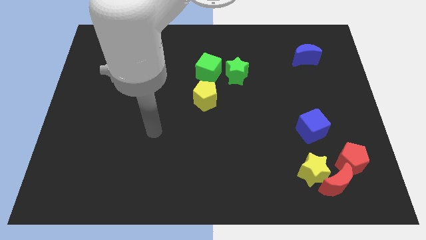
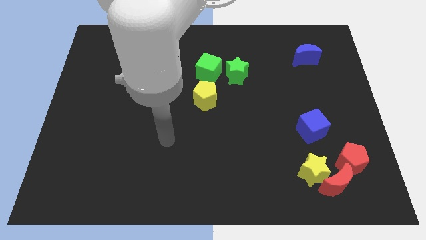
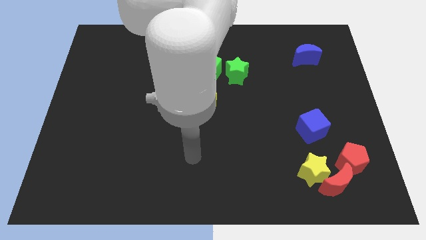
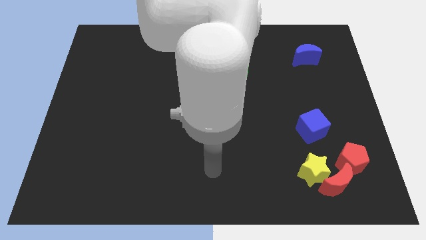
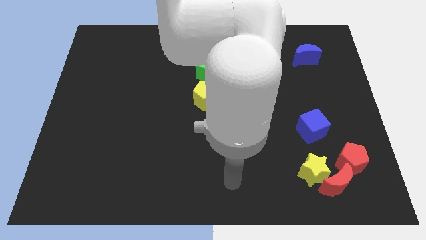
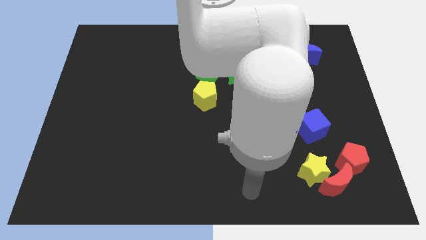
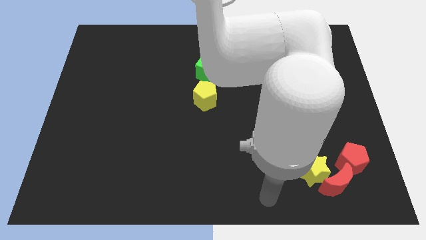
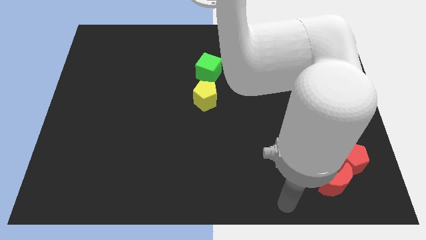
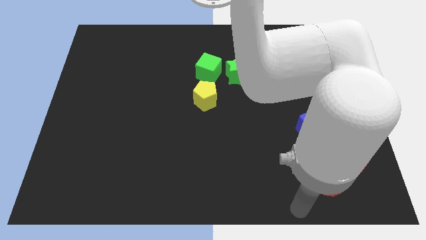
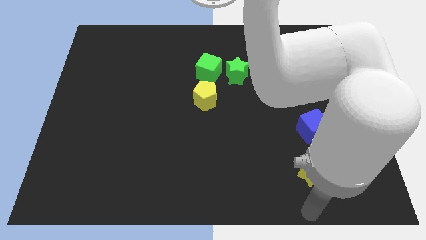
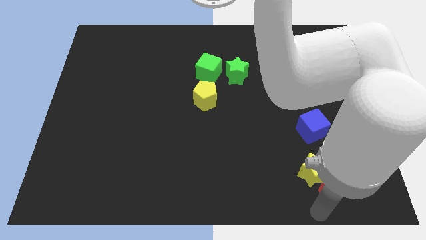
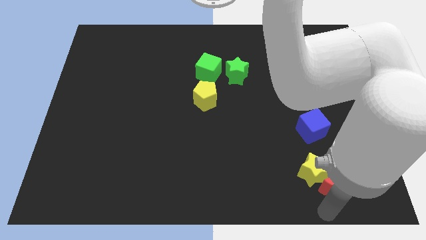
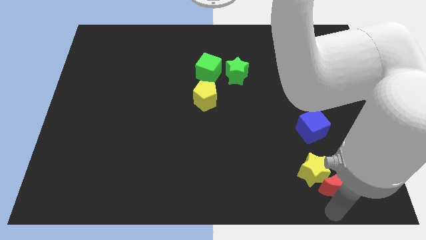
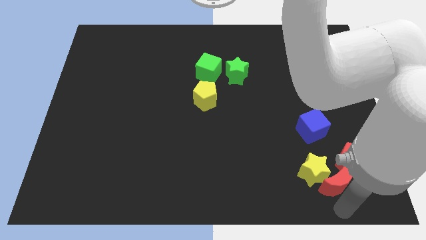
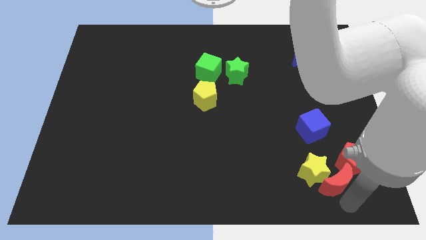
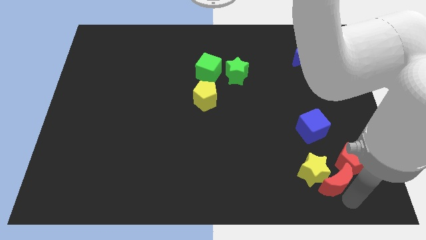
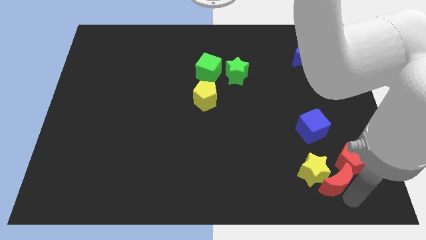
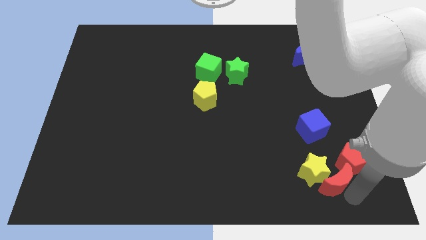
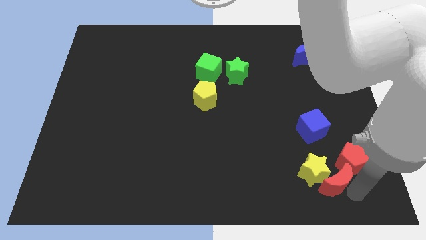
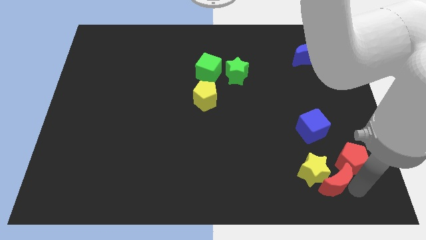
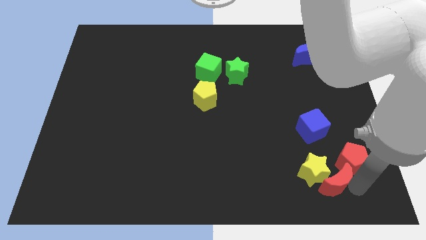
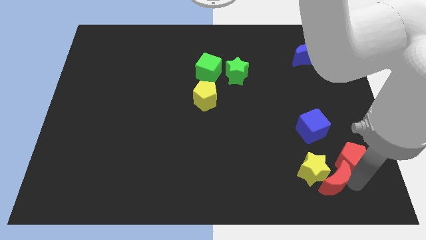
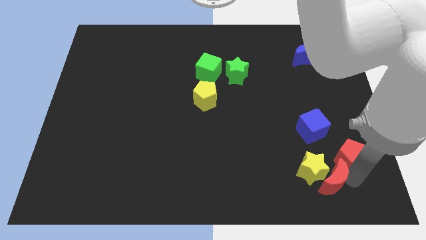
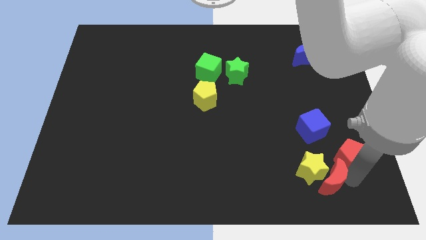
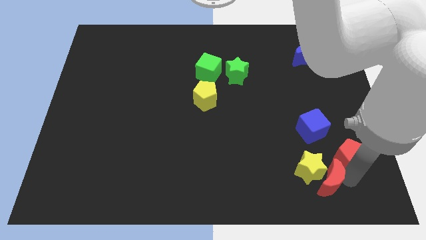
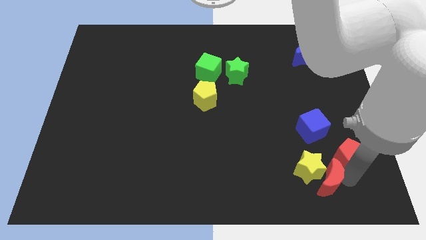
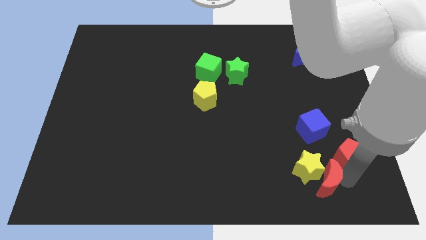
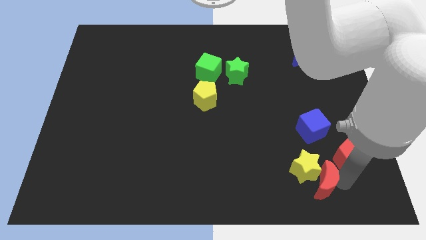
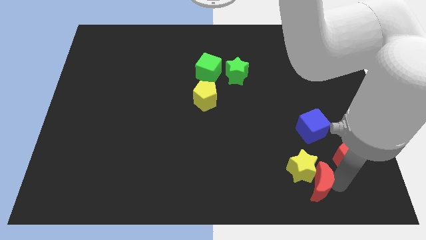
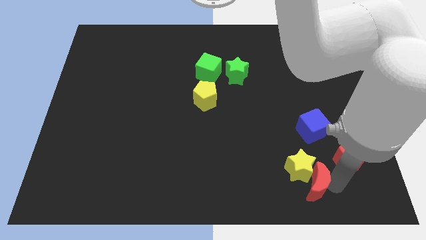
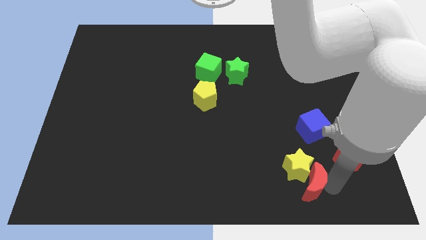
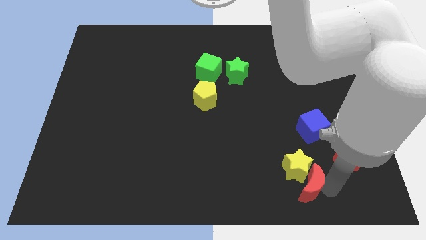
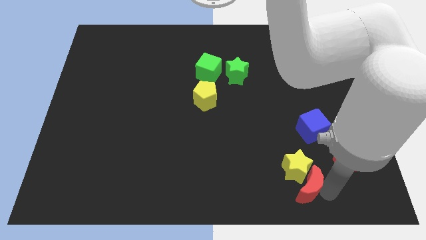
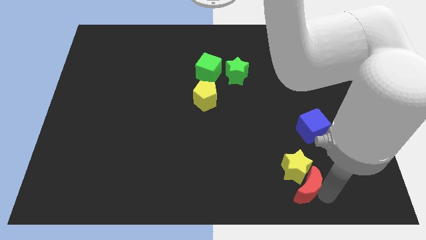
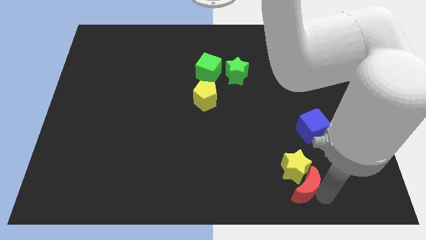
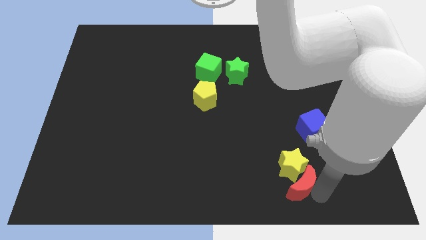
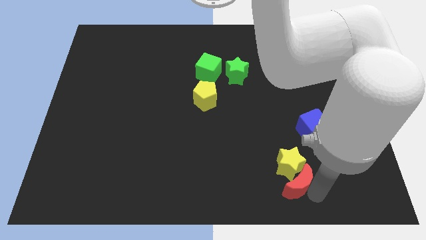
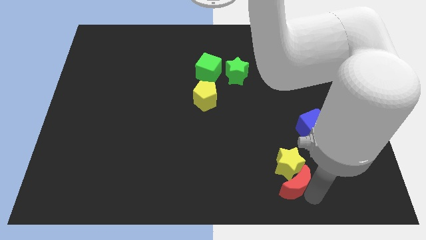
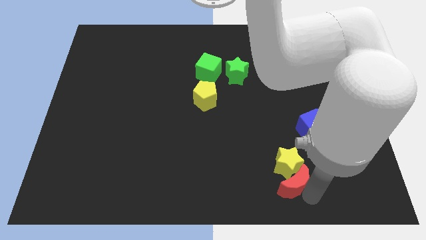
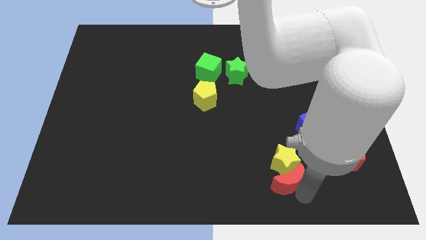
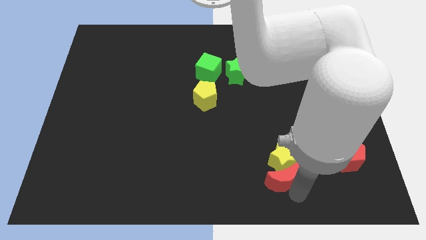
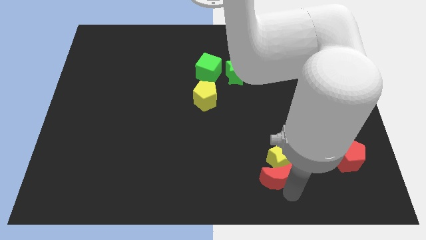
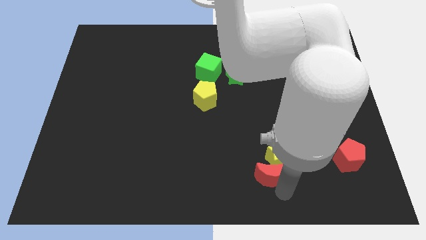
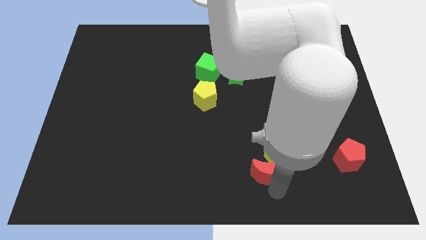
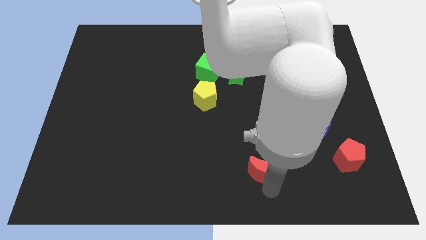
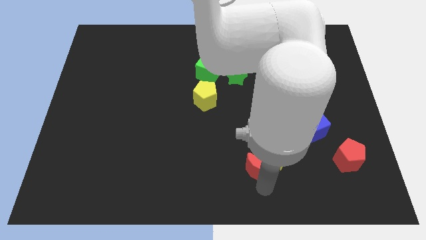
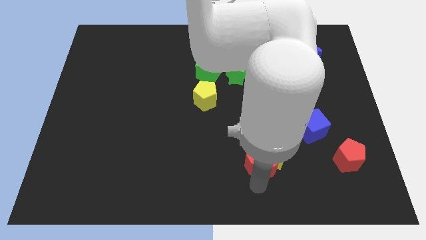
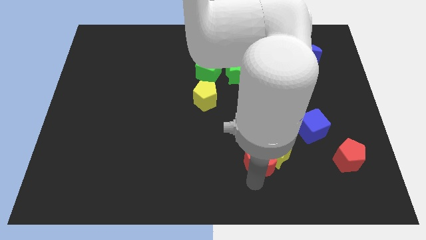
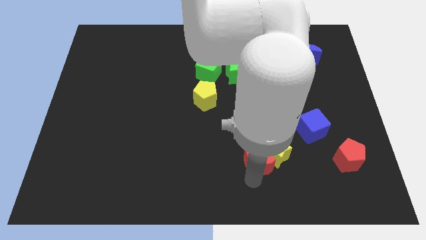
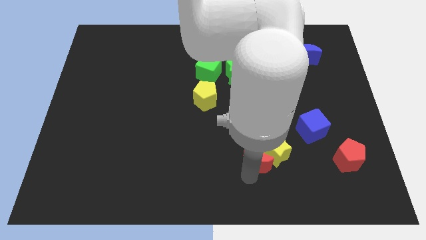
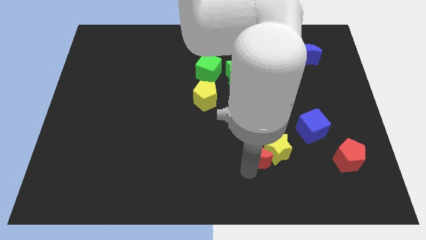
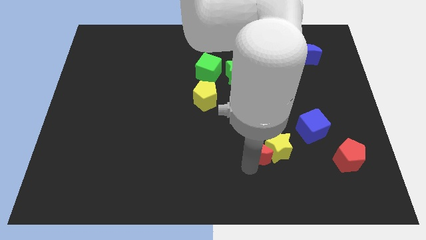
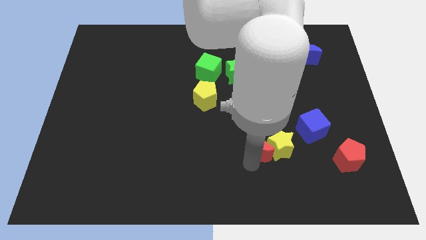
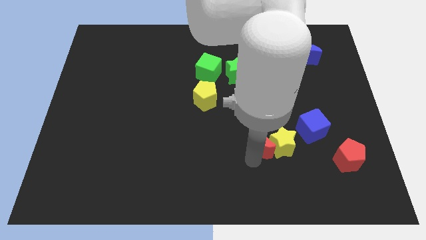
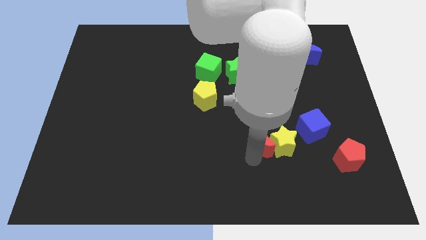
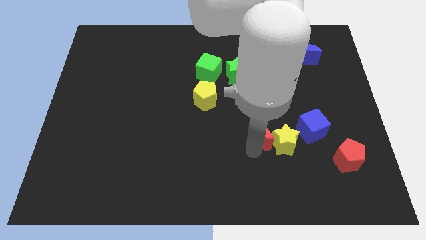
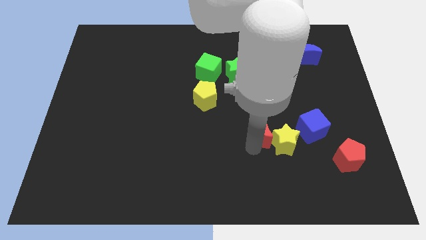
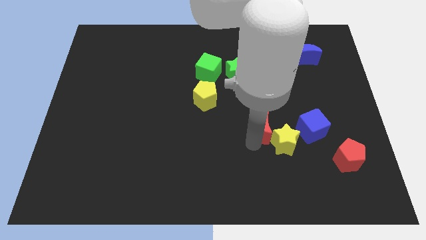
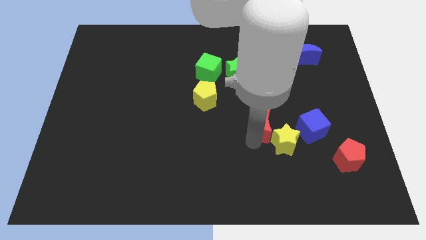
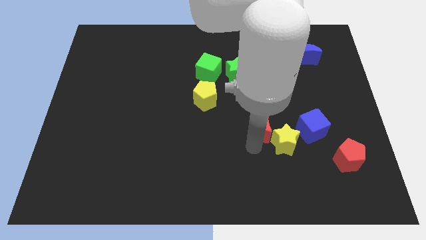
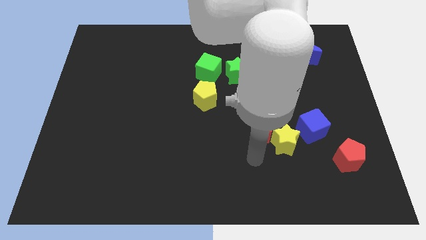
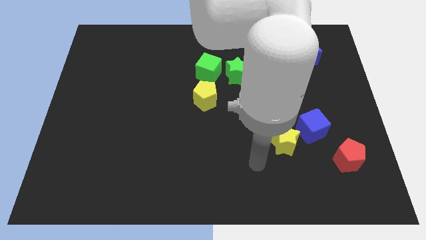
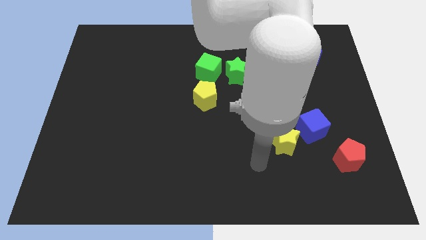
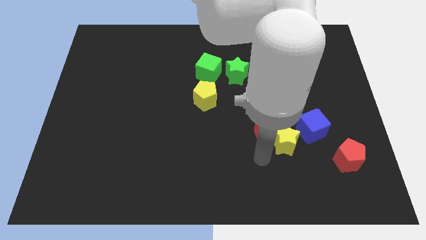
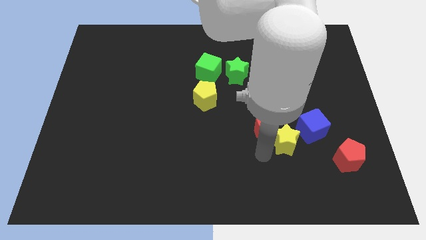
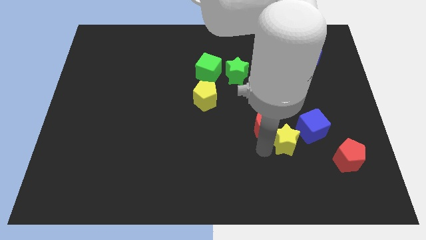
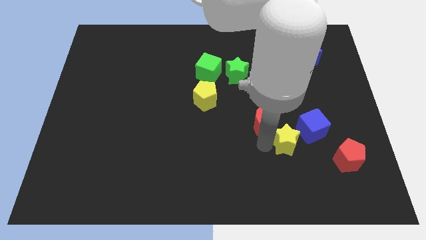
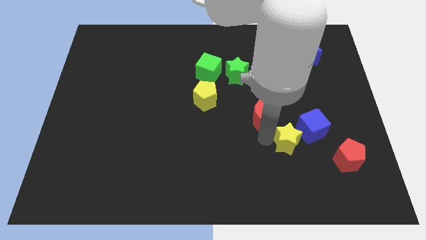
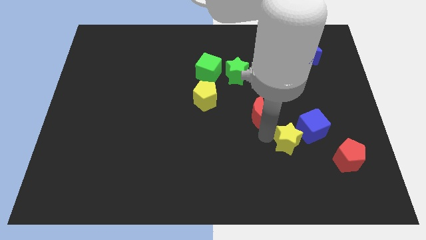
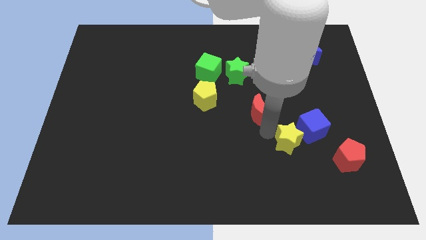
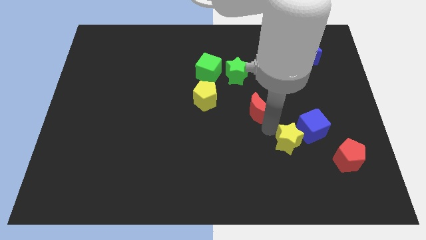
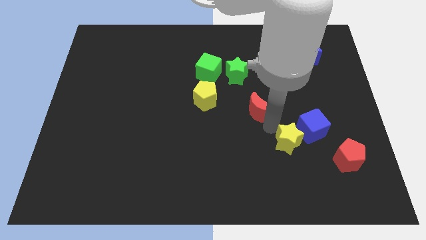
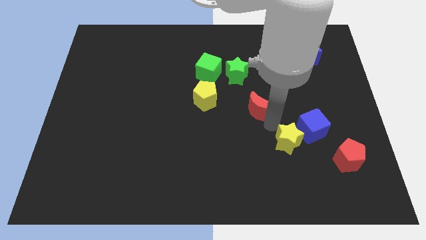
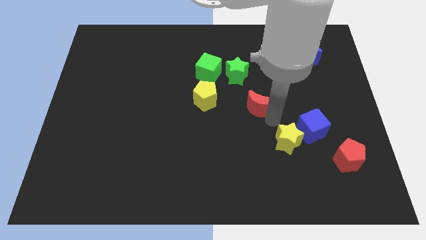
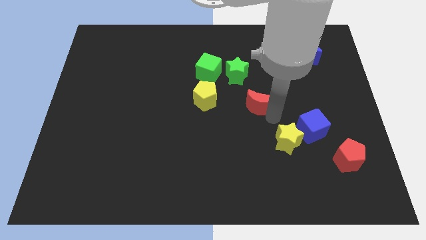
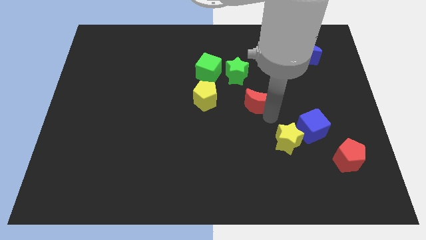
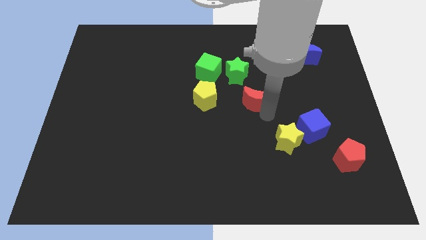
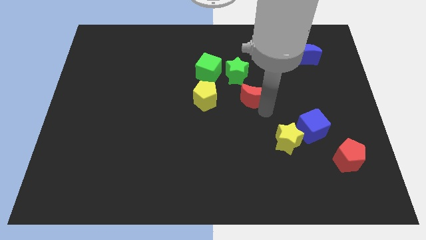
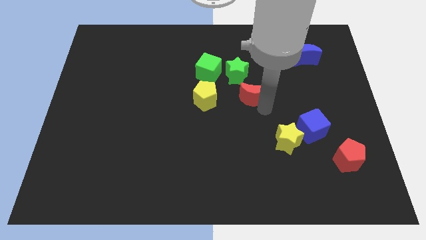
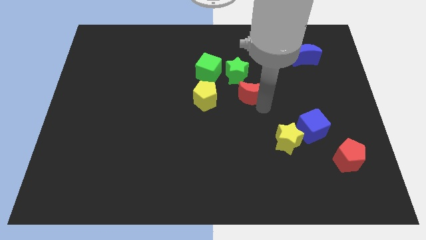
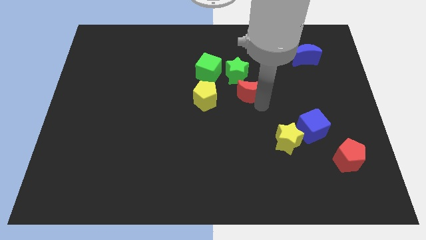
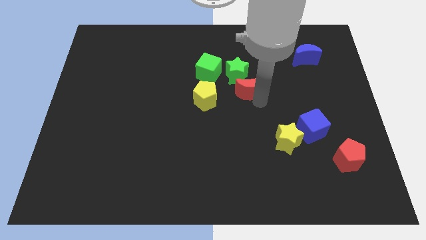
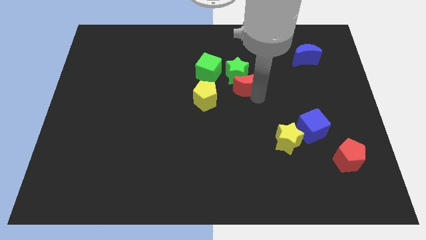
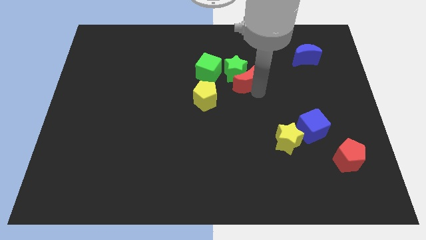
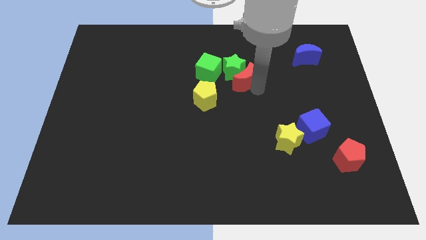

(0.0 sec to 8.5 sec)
slide the red moon close to the green star
